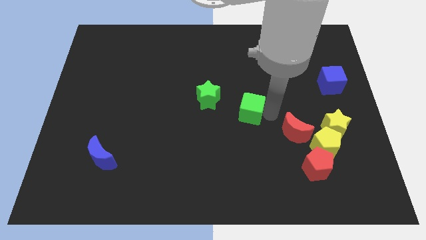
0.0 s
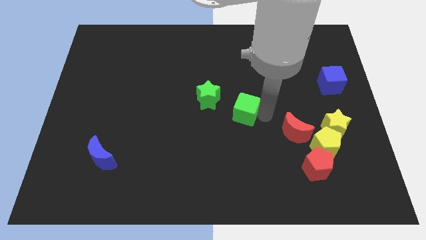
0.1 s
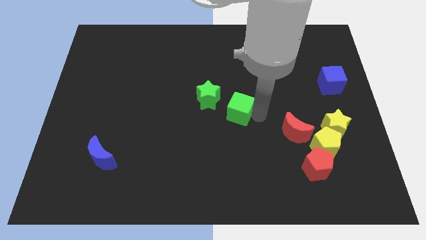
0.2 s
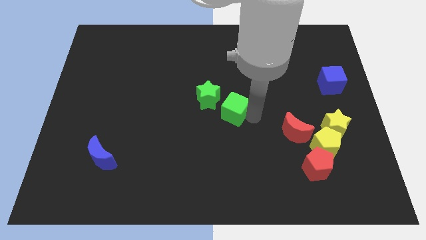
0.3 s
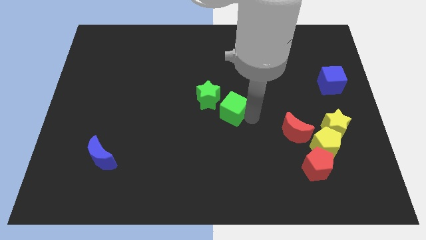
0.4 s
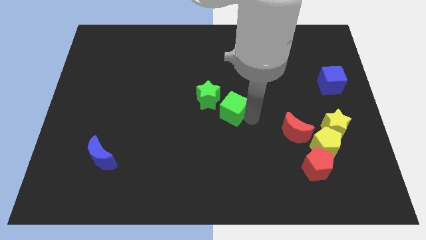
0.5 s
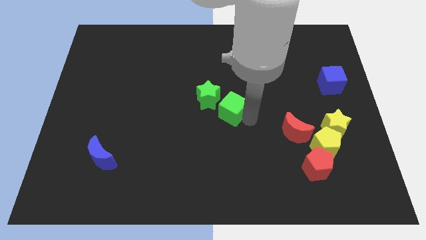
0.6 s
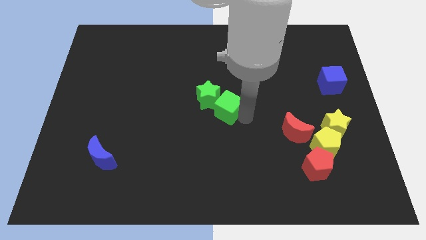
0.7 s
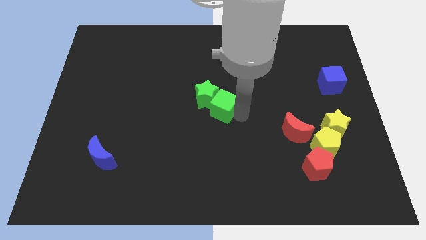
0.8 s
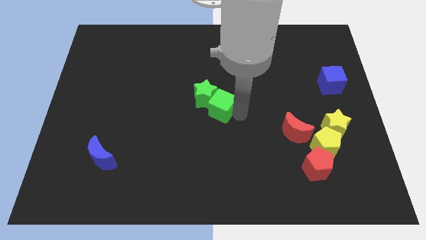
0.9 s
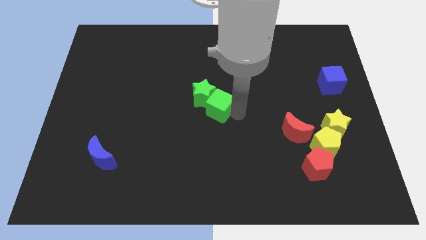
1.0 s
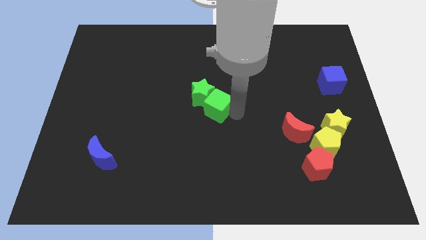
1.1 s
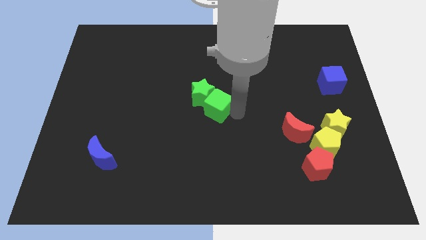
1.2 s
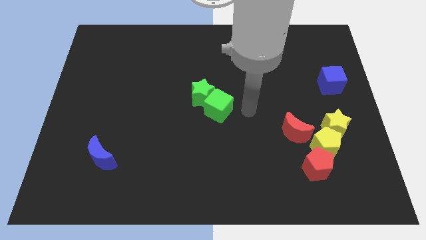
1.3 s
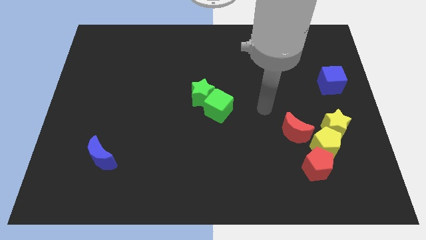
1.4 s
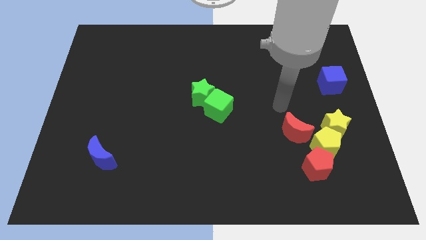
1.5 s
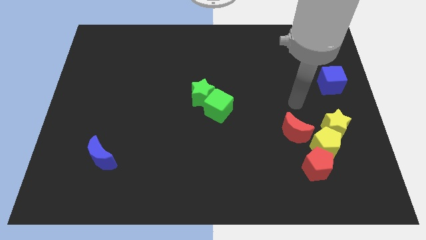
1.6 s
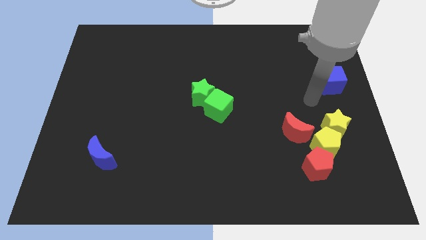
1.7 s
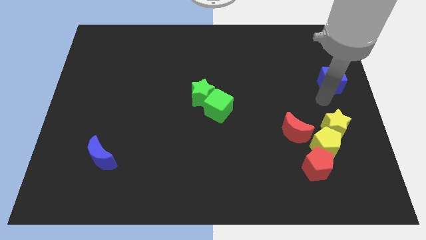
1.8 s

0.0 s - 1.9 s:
place the green cube close to the green star

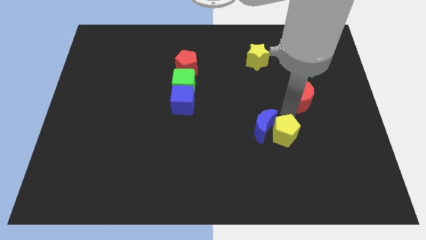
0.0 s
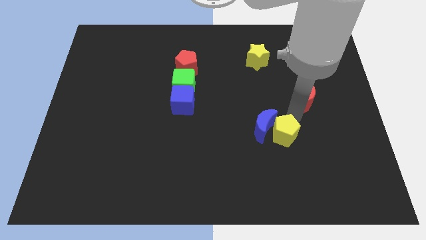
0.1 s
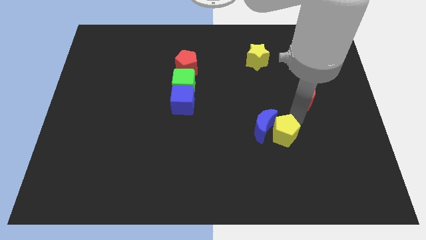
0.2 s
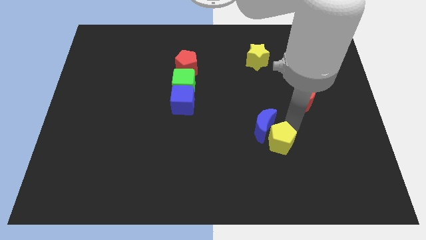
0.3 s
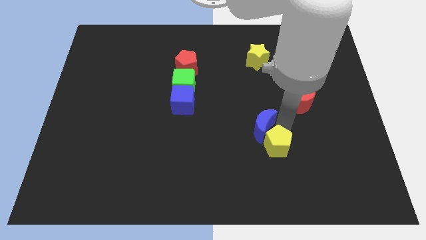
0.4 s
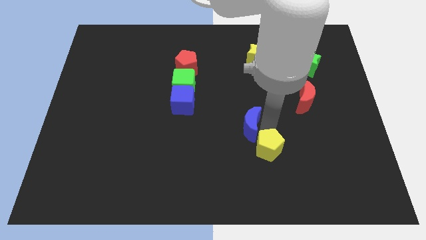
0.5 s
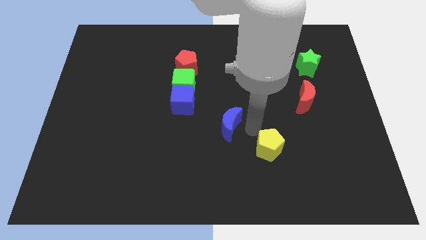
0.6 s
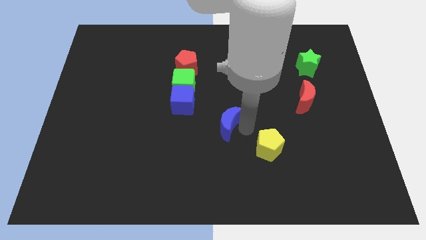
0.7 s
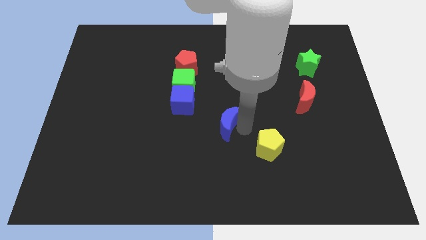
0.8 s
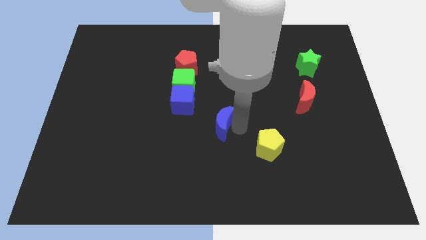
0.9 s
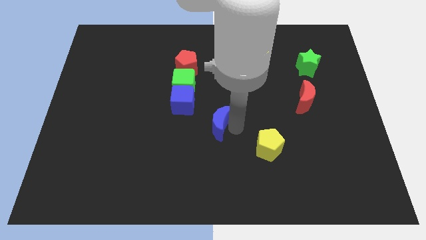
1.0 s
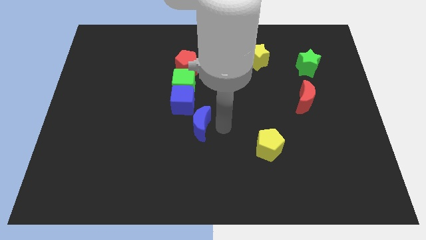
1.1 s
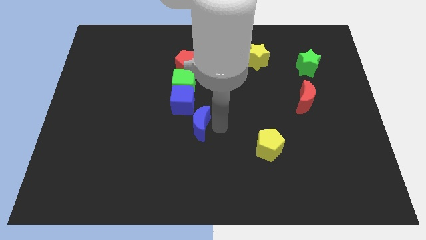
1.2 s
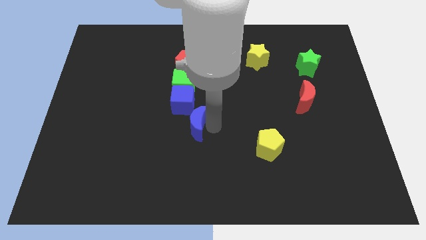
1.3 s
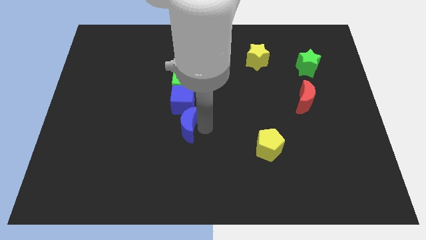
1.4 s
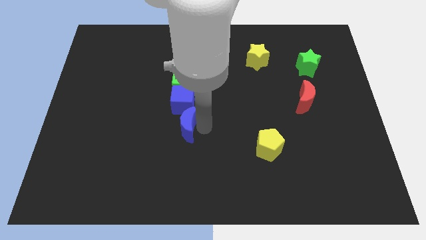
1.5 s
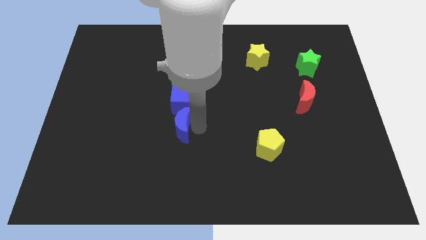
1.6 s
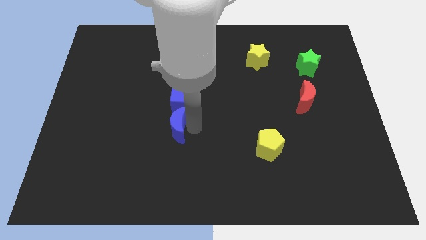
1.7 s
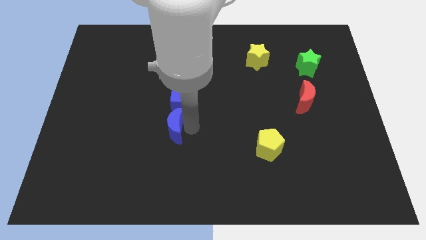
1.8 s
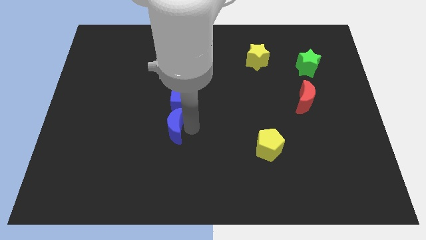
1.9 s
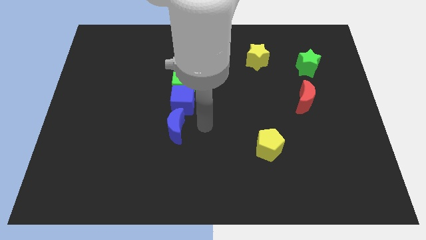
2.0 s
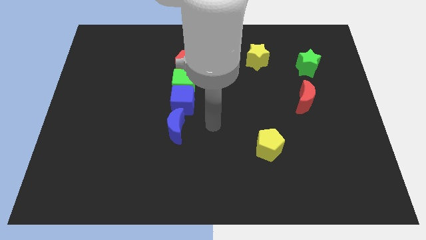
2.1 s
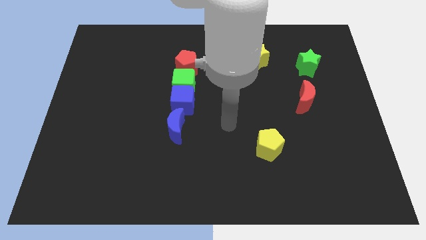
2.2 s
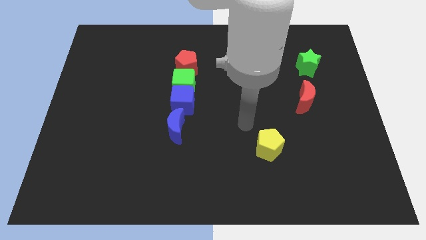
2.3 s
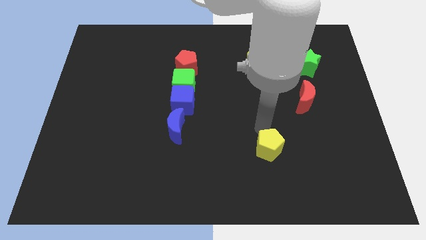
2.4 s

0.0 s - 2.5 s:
separate the blue moon and the yellow pentagon

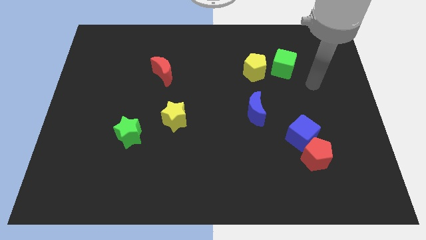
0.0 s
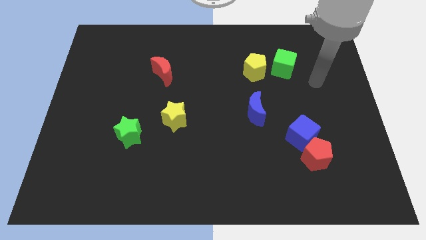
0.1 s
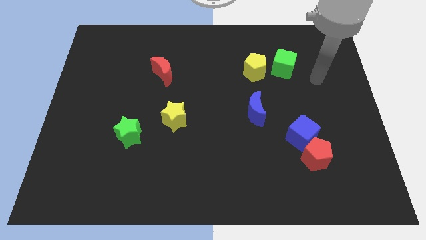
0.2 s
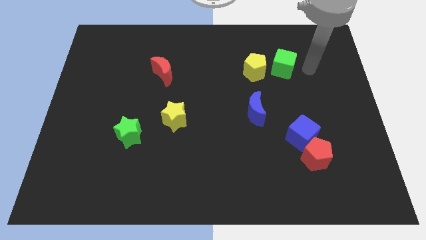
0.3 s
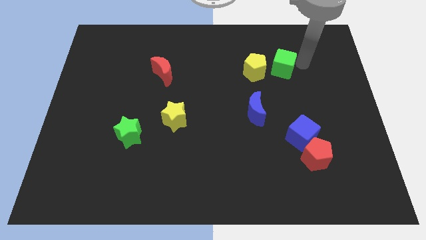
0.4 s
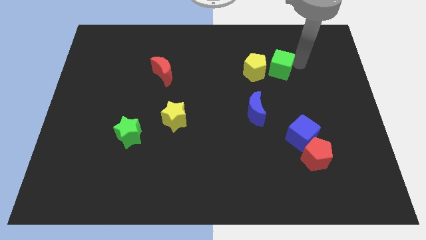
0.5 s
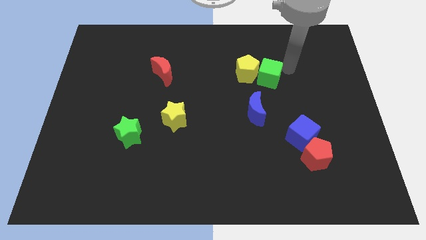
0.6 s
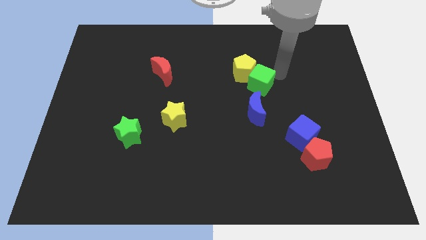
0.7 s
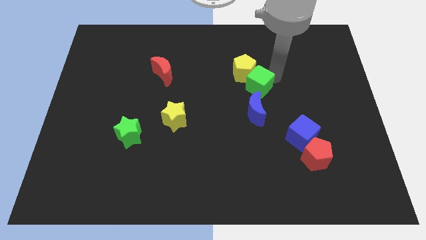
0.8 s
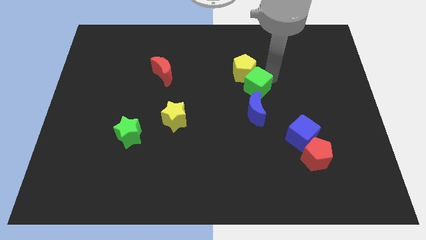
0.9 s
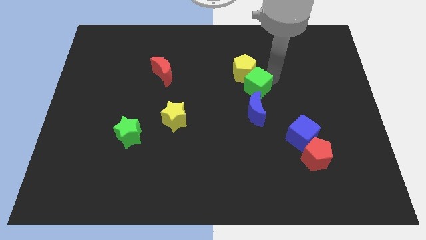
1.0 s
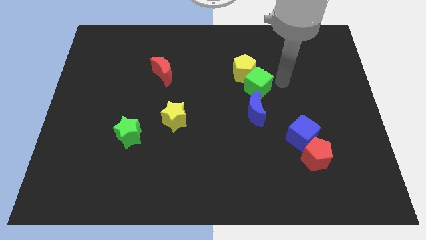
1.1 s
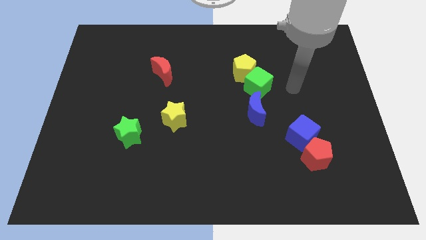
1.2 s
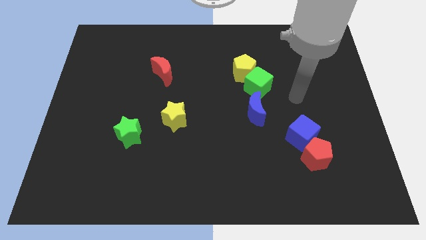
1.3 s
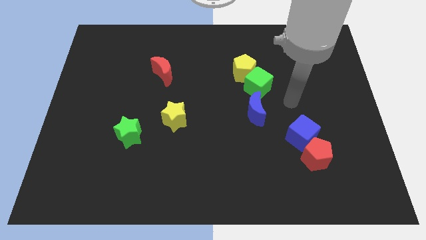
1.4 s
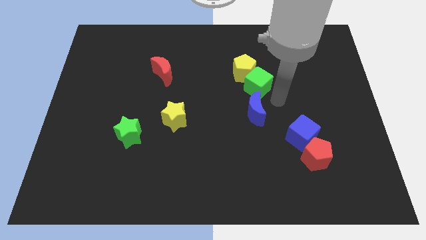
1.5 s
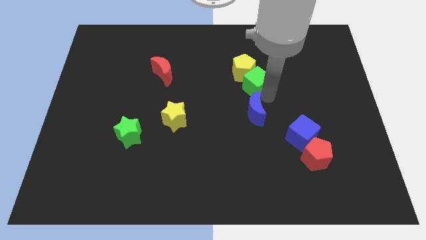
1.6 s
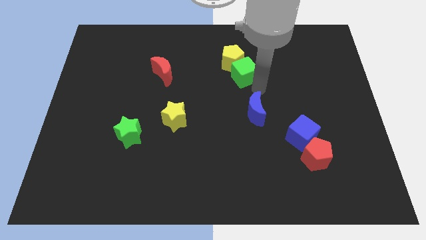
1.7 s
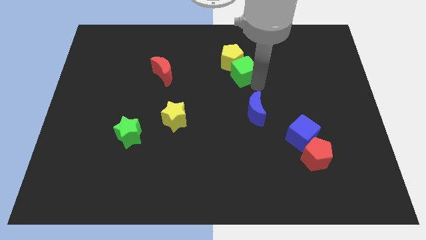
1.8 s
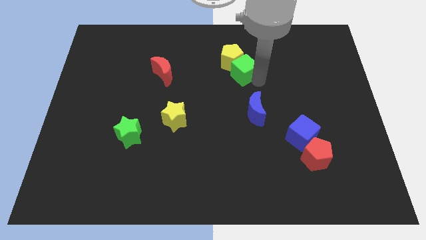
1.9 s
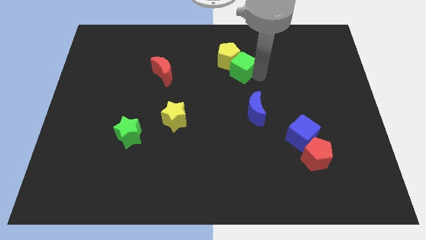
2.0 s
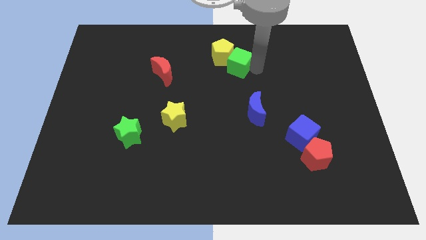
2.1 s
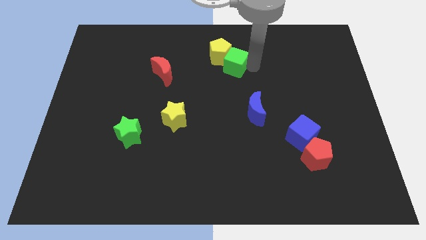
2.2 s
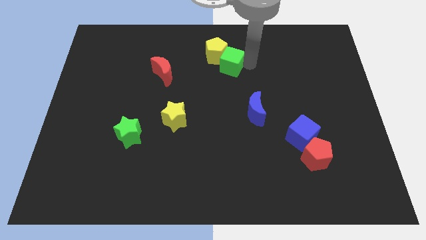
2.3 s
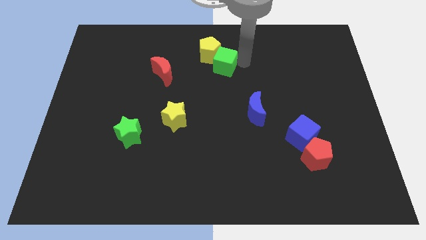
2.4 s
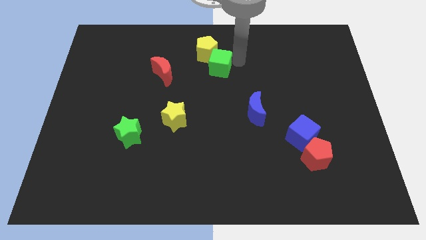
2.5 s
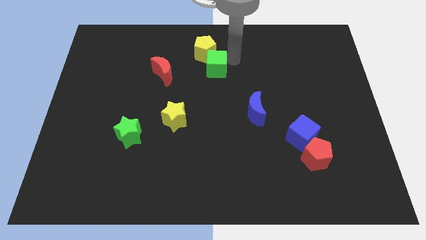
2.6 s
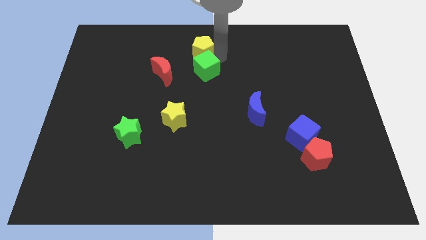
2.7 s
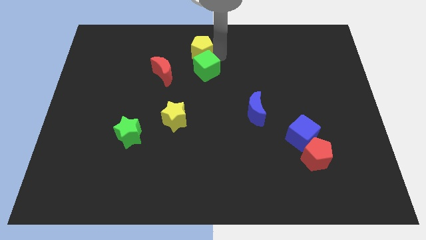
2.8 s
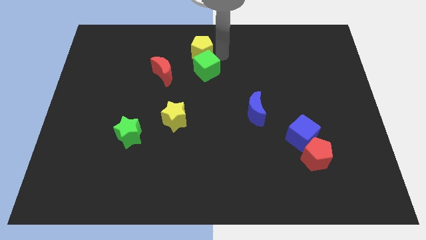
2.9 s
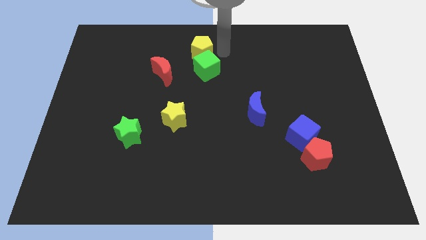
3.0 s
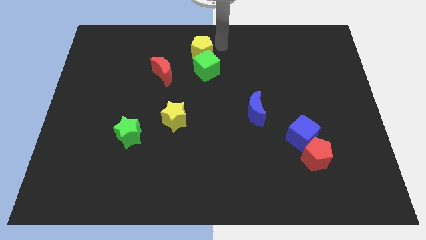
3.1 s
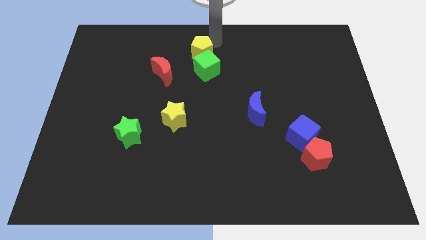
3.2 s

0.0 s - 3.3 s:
move the green cube along with the yellow pentagon to the right side of the red crescent

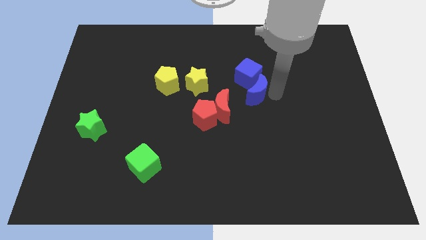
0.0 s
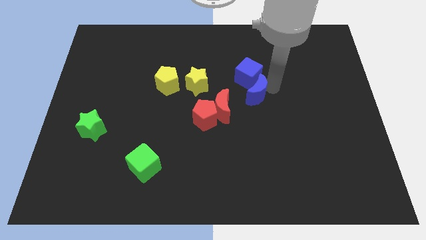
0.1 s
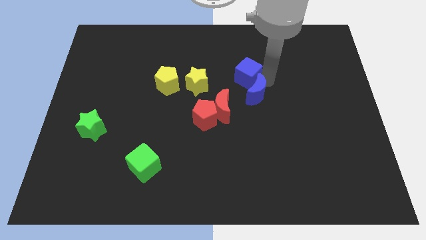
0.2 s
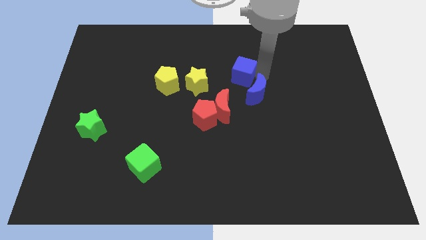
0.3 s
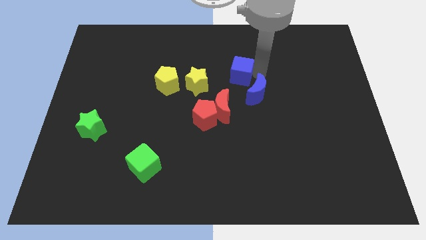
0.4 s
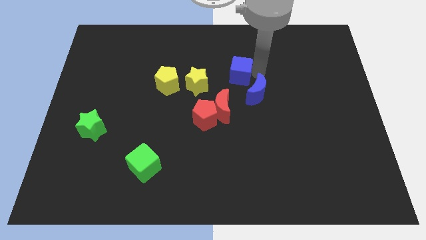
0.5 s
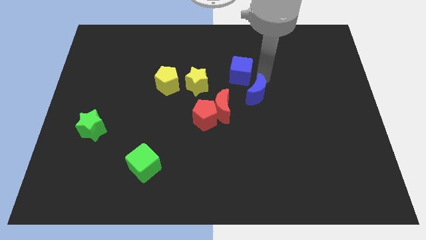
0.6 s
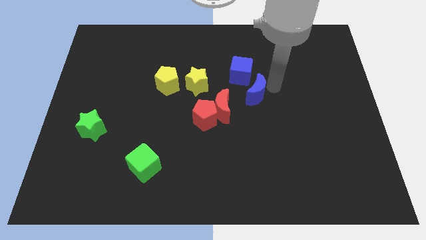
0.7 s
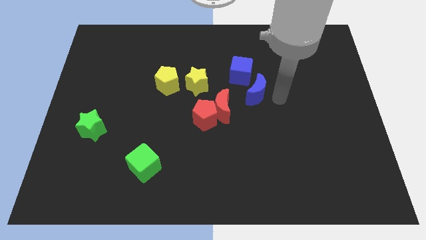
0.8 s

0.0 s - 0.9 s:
separate blue cube from blue moon

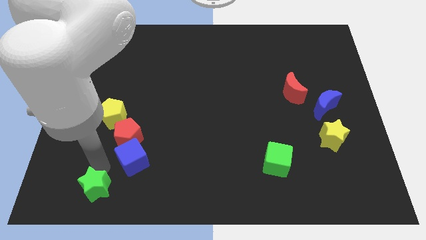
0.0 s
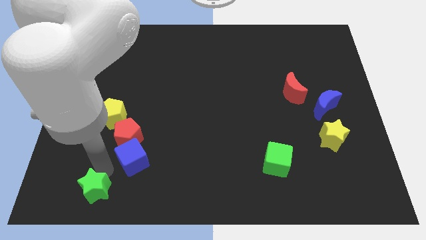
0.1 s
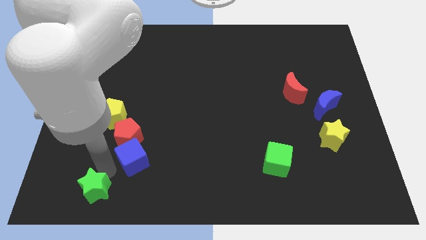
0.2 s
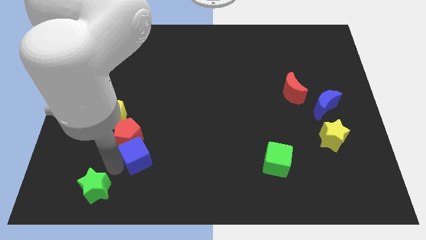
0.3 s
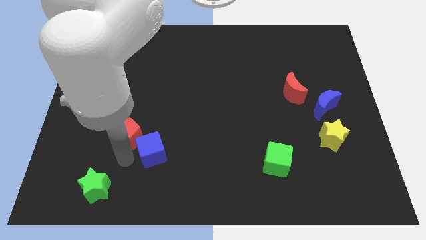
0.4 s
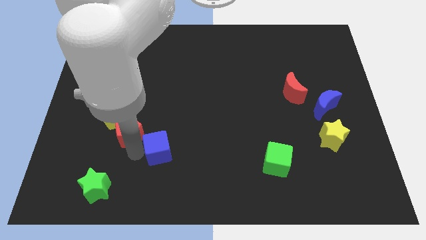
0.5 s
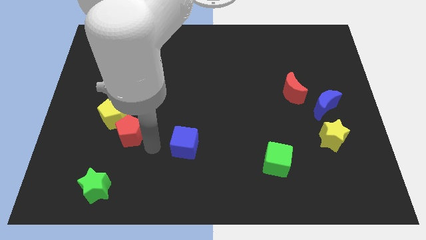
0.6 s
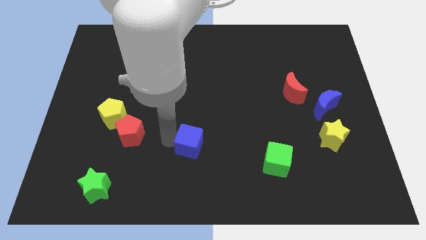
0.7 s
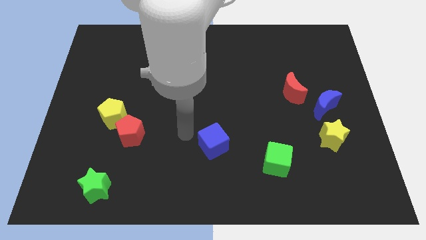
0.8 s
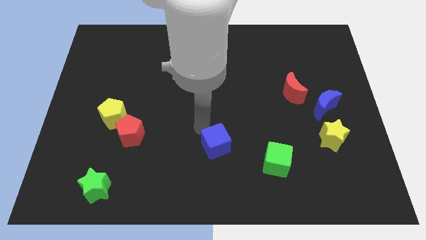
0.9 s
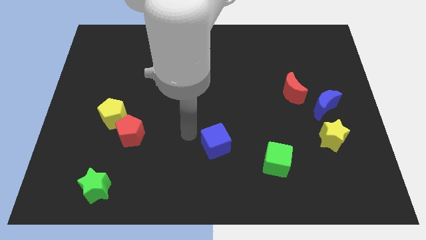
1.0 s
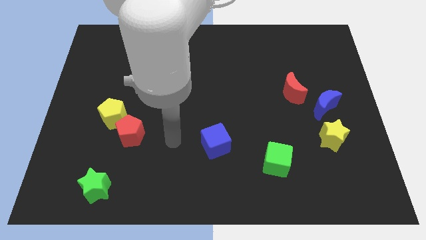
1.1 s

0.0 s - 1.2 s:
move the blue cube away from the red pentagon
